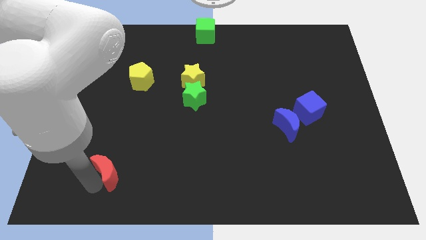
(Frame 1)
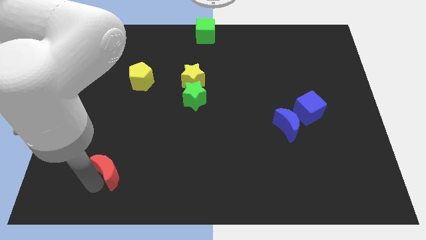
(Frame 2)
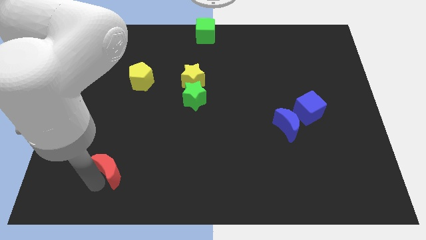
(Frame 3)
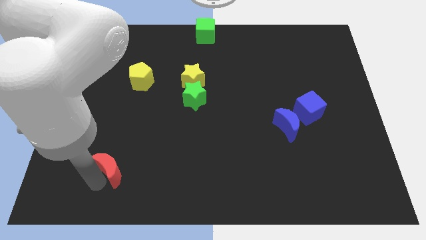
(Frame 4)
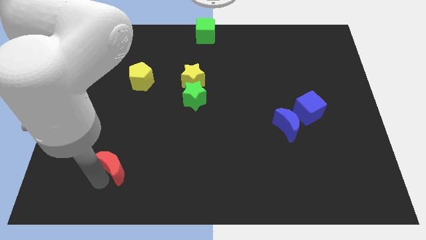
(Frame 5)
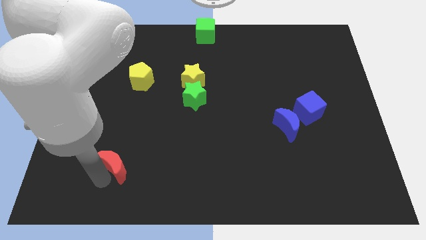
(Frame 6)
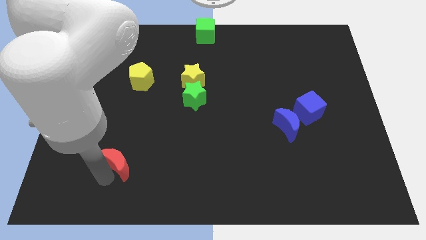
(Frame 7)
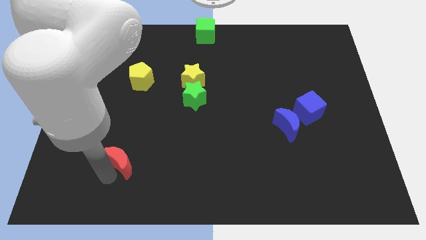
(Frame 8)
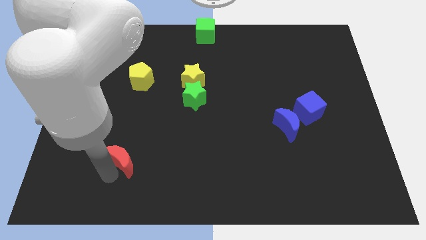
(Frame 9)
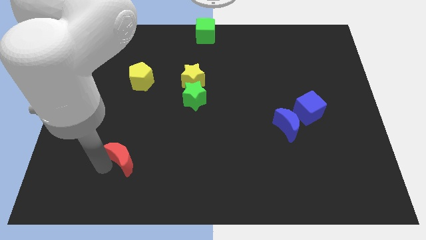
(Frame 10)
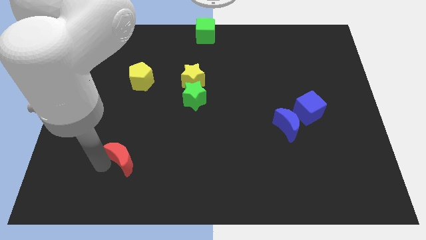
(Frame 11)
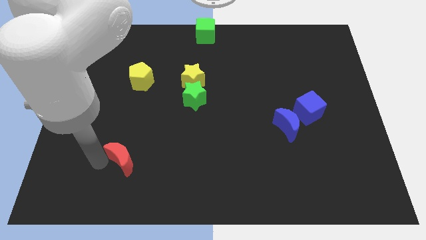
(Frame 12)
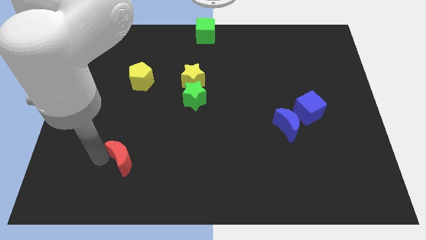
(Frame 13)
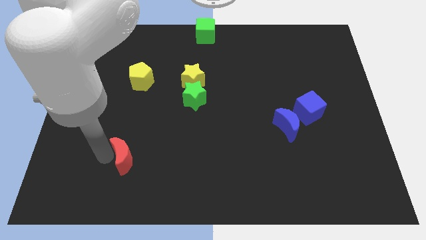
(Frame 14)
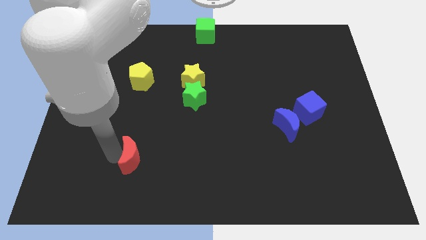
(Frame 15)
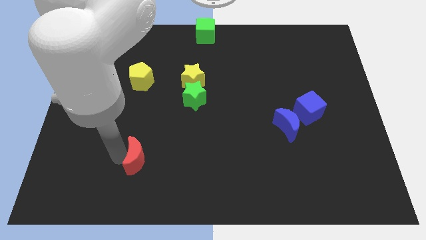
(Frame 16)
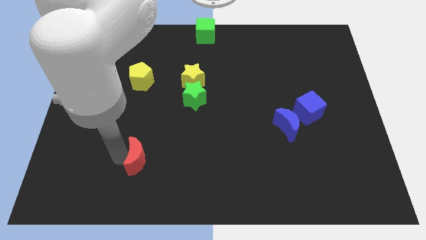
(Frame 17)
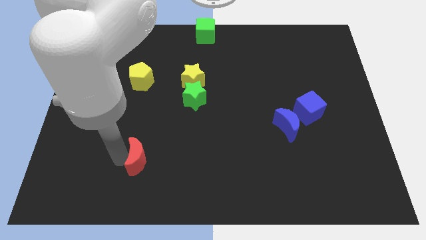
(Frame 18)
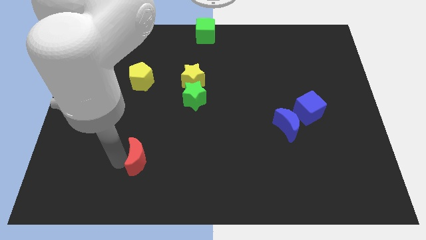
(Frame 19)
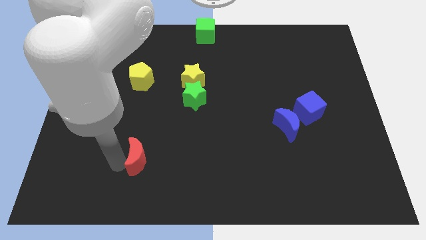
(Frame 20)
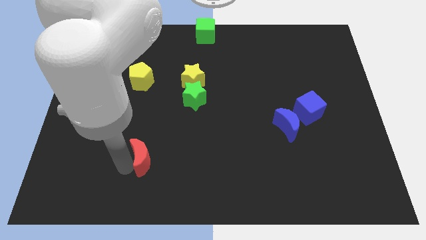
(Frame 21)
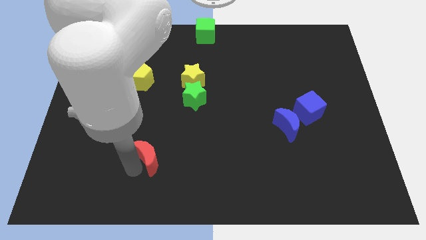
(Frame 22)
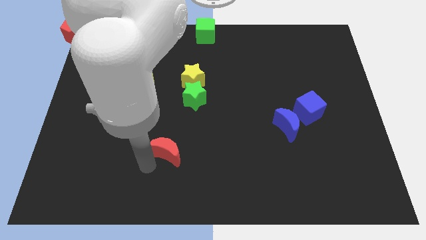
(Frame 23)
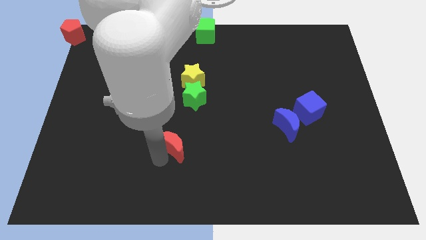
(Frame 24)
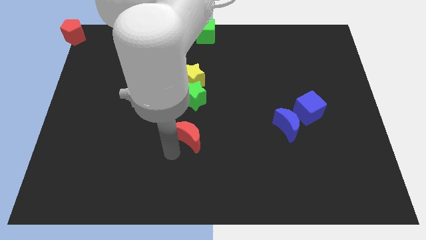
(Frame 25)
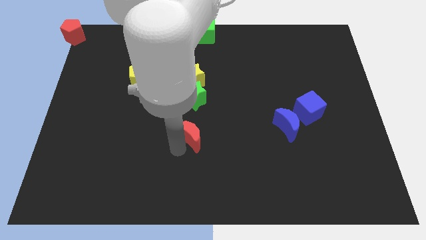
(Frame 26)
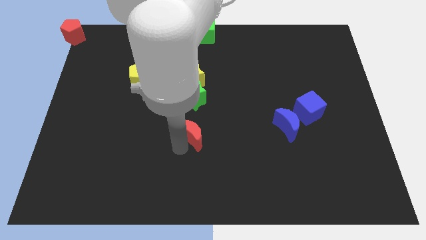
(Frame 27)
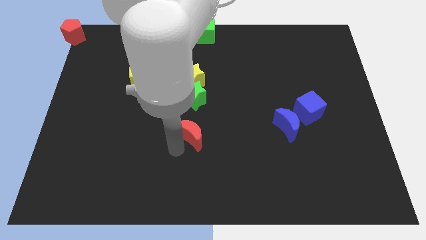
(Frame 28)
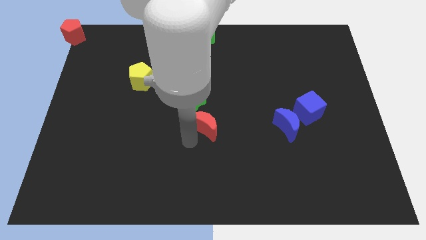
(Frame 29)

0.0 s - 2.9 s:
move the red crescent towards the center of the board

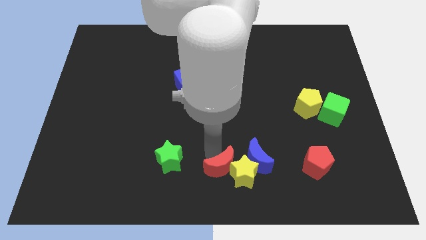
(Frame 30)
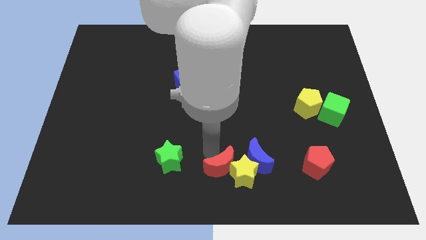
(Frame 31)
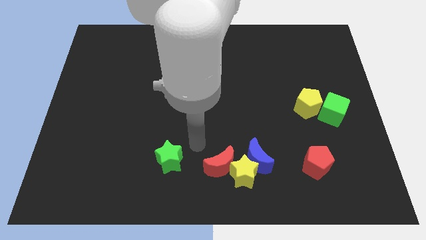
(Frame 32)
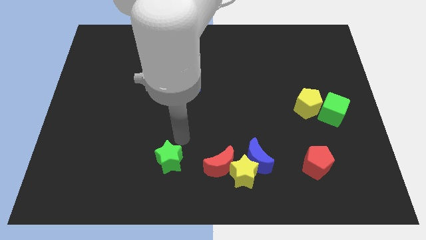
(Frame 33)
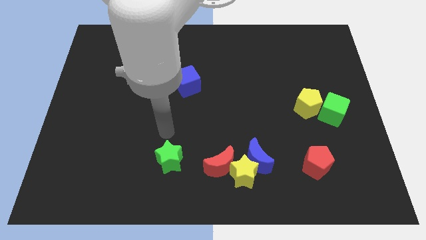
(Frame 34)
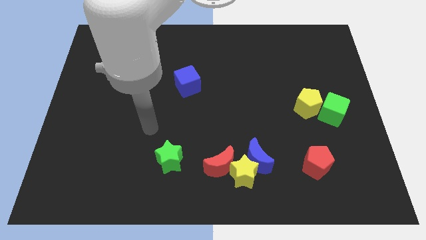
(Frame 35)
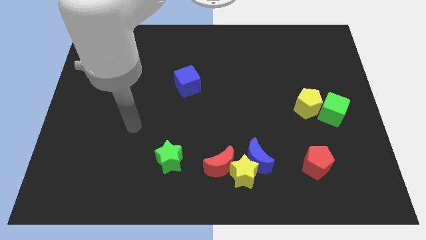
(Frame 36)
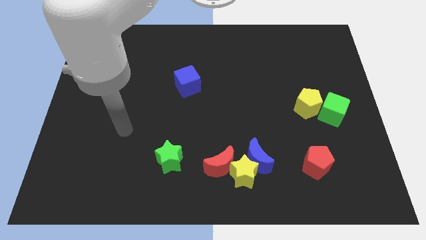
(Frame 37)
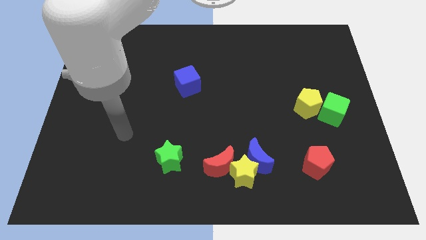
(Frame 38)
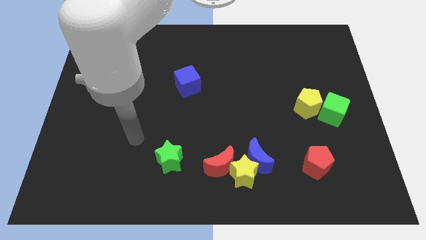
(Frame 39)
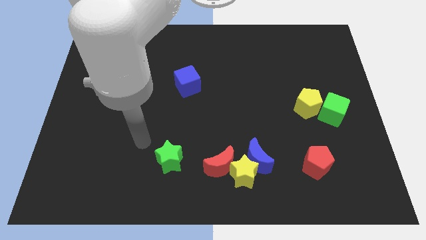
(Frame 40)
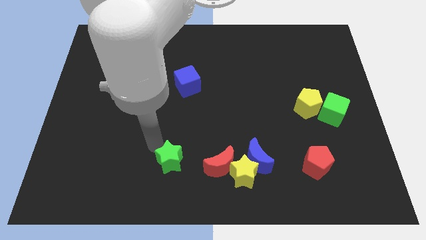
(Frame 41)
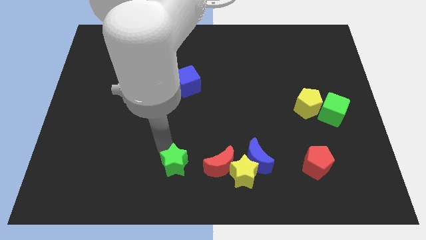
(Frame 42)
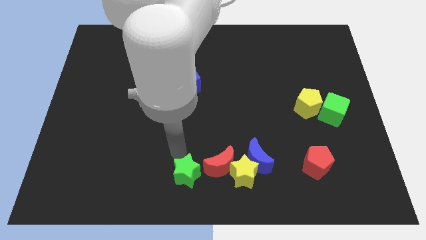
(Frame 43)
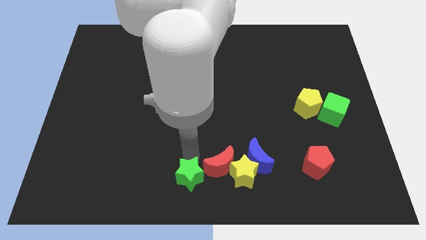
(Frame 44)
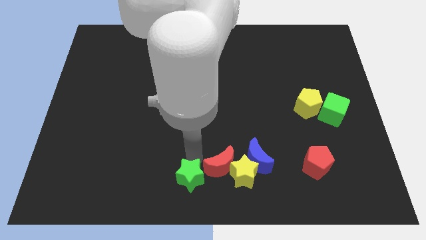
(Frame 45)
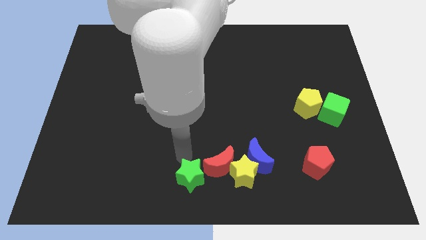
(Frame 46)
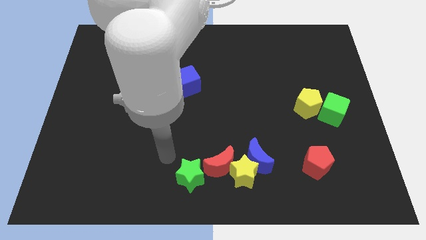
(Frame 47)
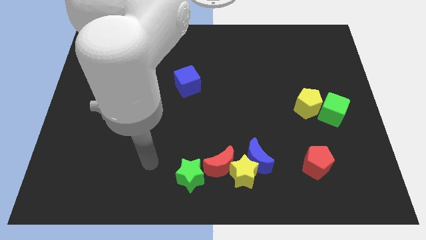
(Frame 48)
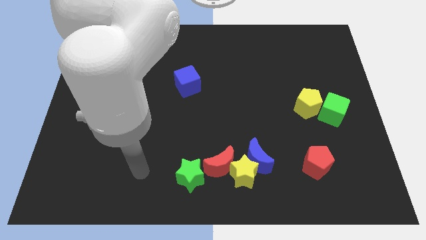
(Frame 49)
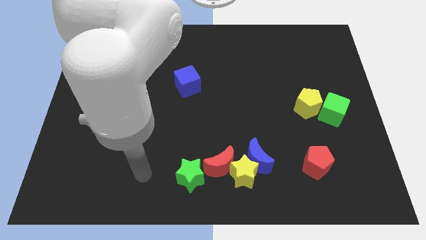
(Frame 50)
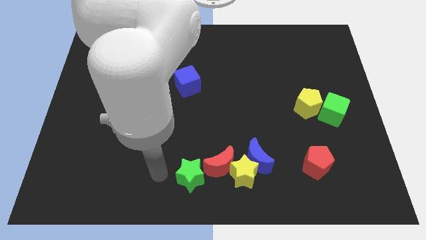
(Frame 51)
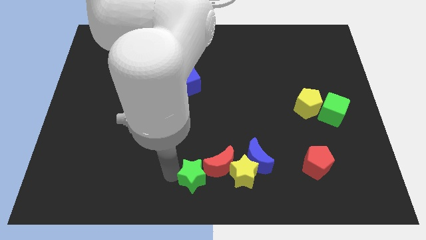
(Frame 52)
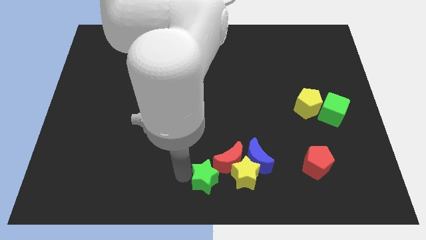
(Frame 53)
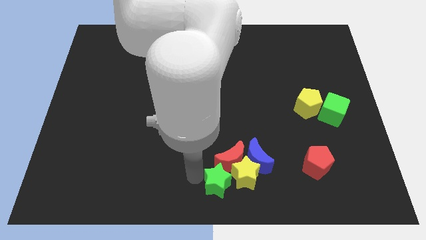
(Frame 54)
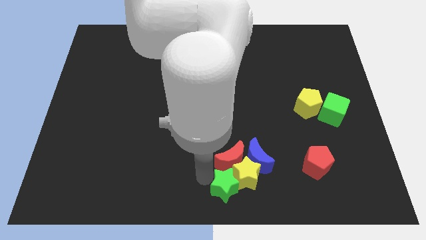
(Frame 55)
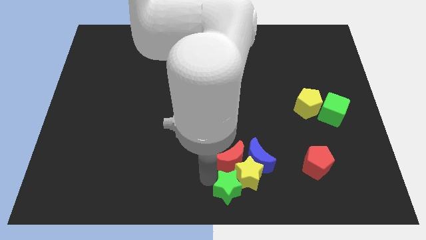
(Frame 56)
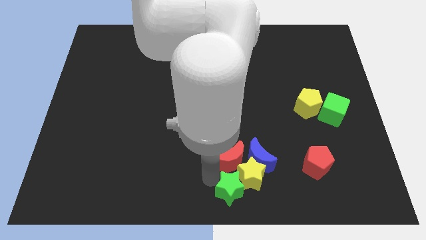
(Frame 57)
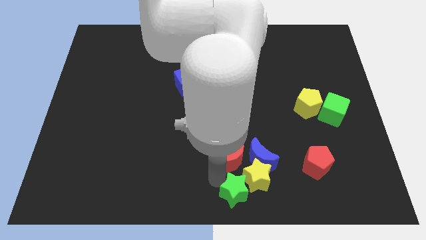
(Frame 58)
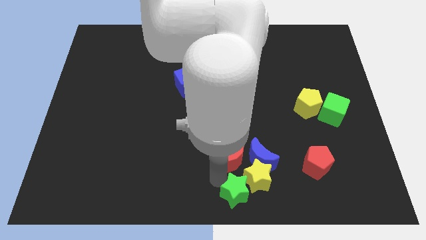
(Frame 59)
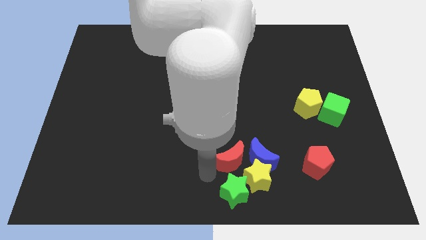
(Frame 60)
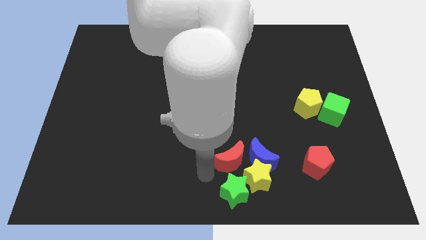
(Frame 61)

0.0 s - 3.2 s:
push the green star to the left of the yellow star

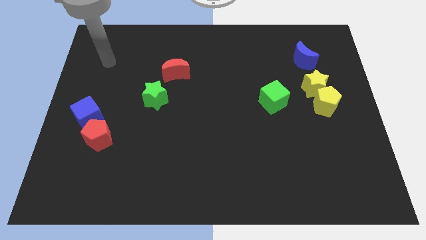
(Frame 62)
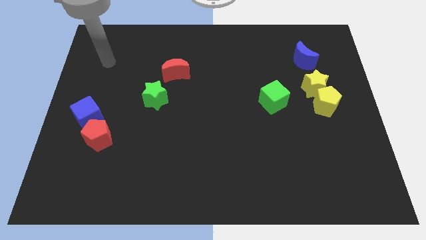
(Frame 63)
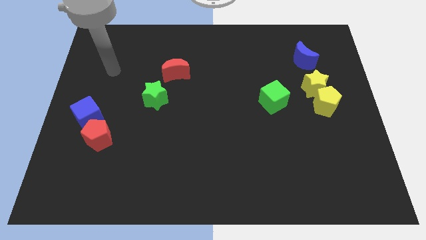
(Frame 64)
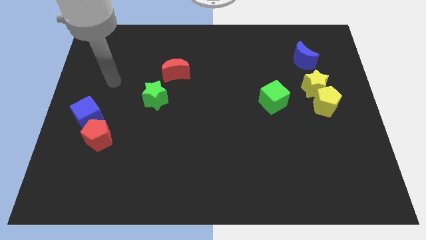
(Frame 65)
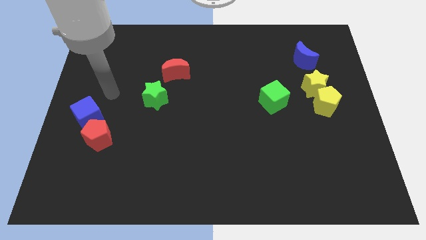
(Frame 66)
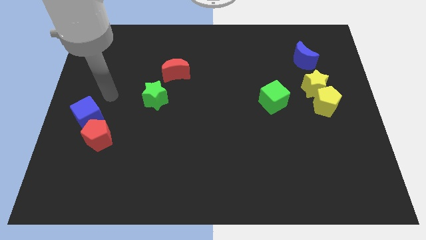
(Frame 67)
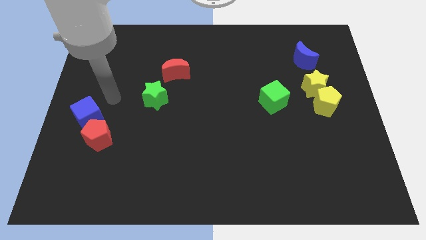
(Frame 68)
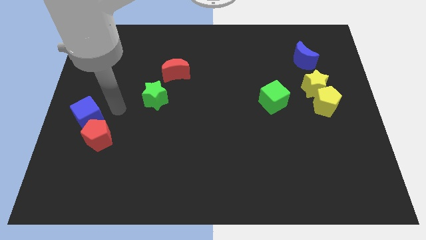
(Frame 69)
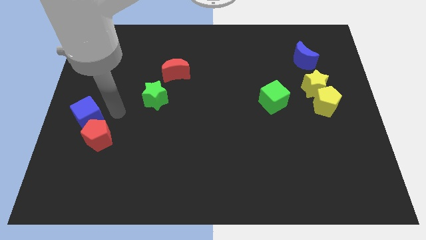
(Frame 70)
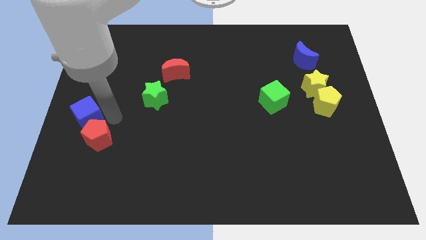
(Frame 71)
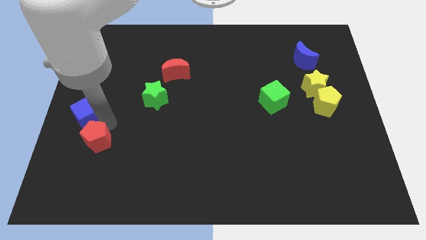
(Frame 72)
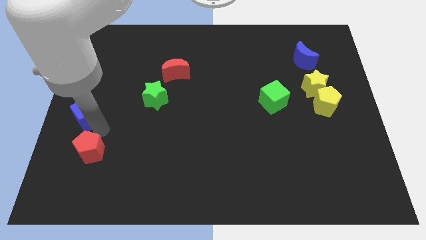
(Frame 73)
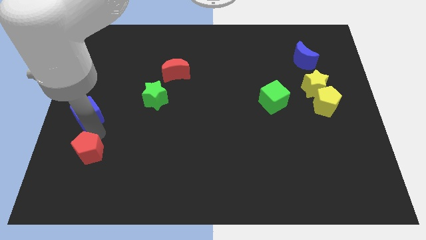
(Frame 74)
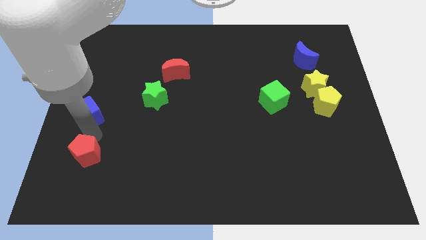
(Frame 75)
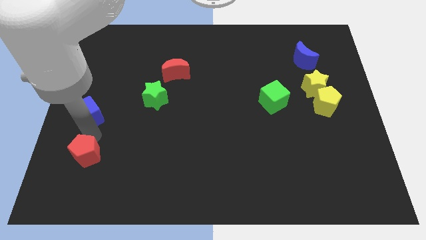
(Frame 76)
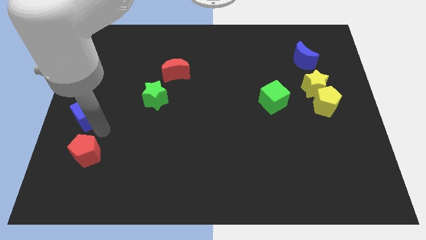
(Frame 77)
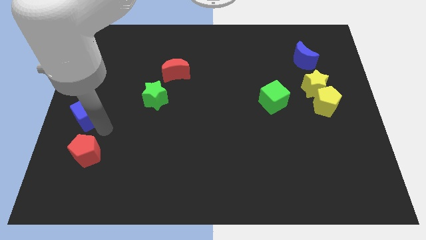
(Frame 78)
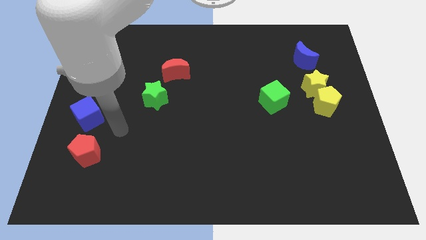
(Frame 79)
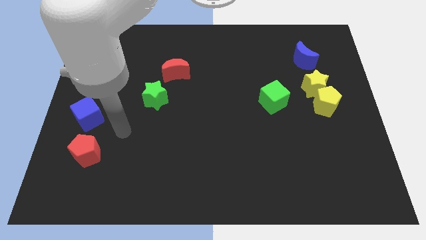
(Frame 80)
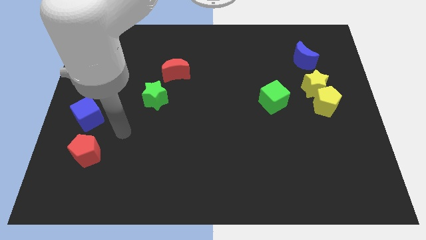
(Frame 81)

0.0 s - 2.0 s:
move red pentagon below the blue cube

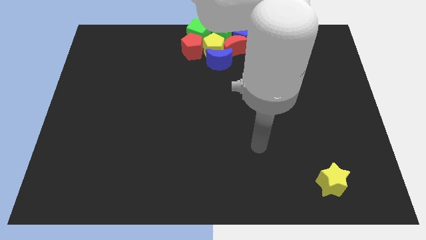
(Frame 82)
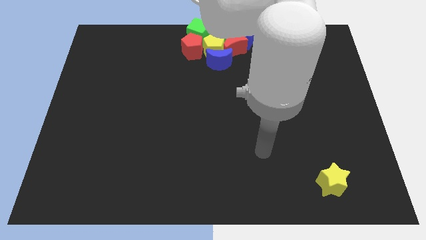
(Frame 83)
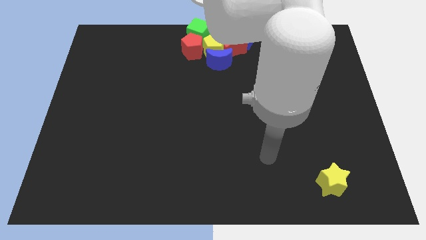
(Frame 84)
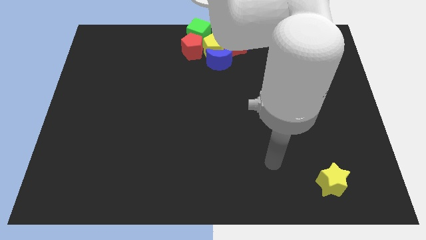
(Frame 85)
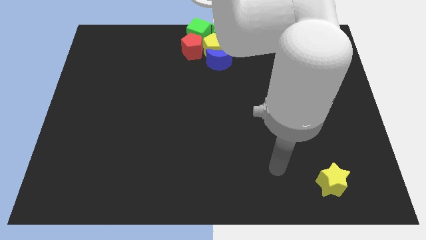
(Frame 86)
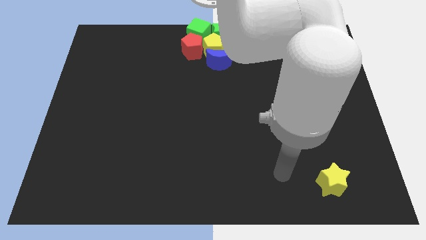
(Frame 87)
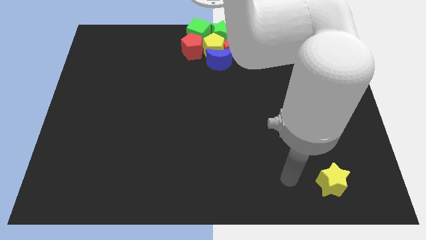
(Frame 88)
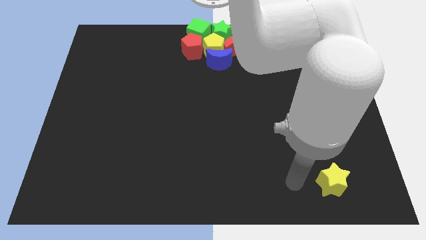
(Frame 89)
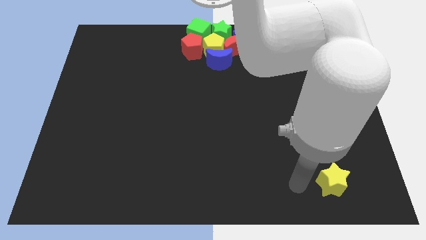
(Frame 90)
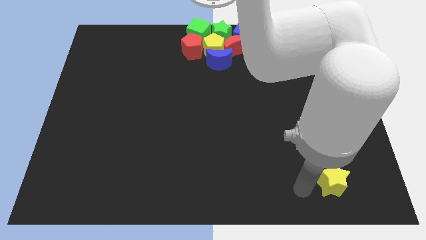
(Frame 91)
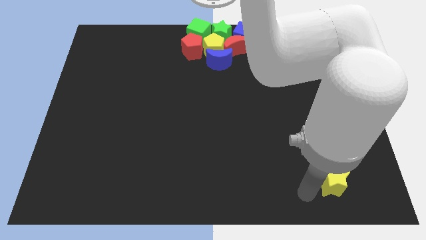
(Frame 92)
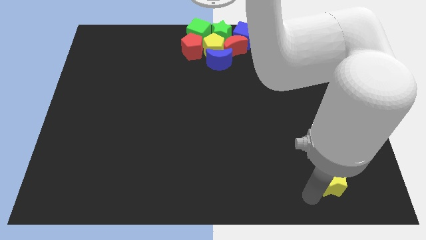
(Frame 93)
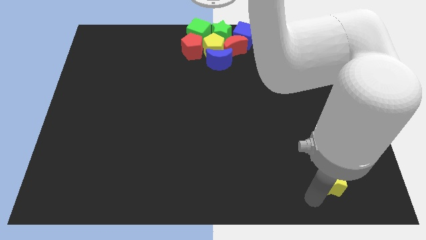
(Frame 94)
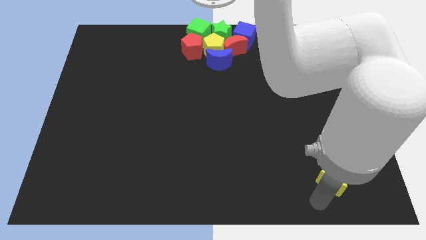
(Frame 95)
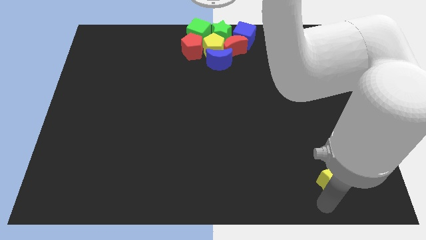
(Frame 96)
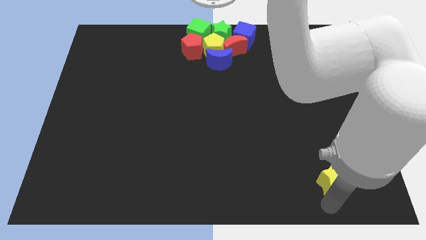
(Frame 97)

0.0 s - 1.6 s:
move the arm towards bottom right of the board
